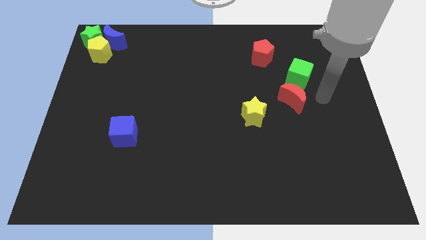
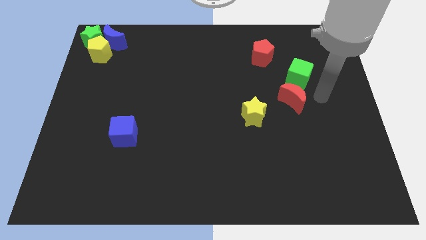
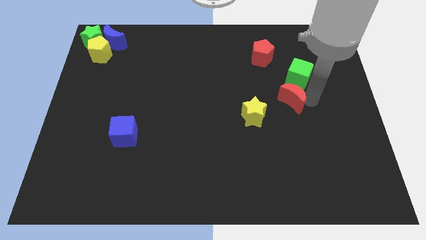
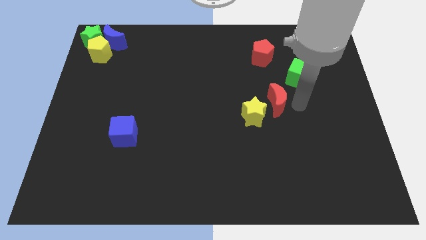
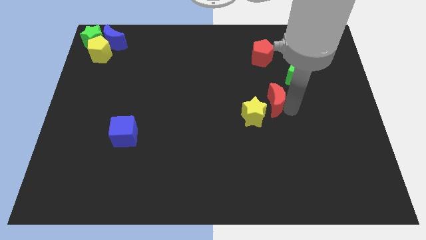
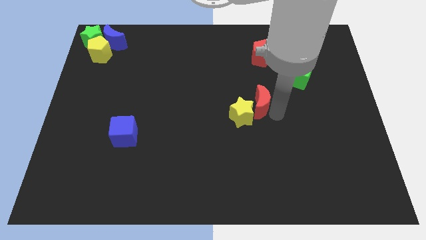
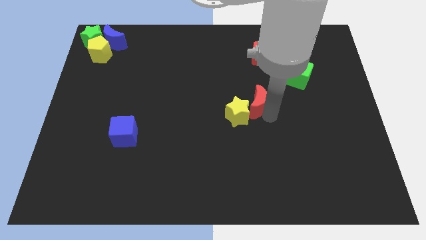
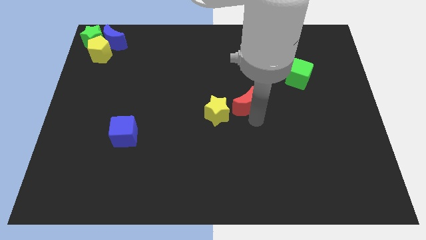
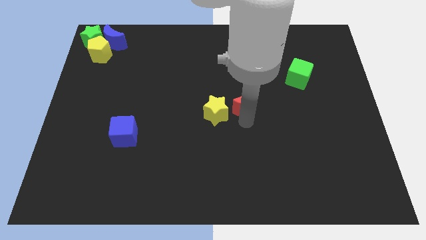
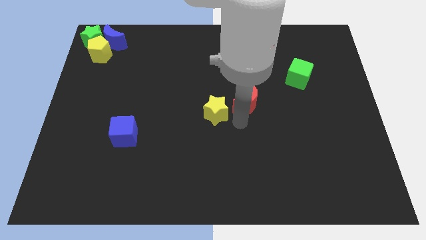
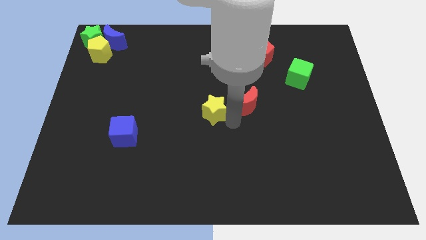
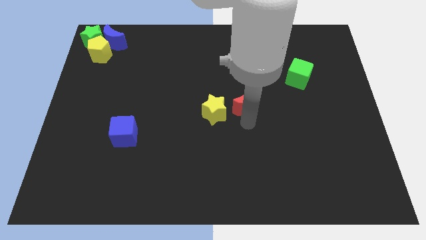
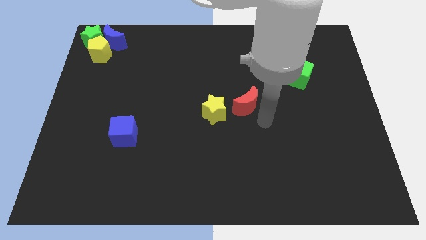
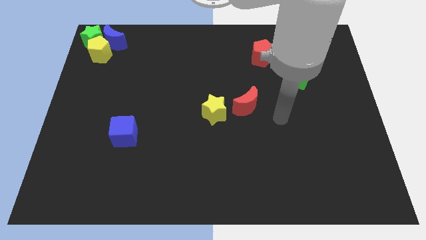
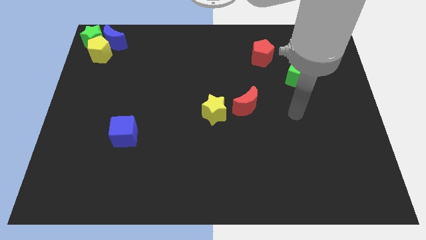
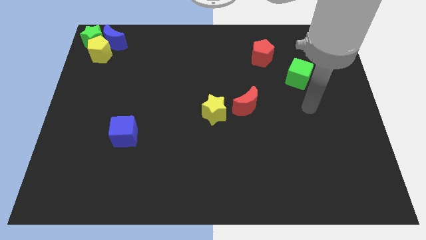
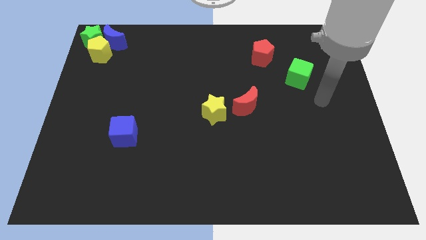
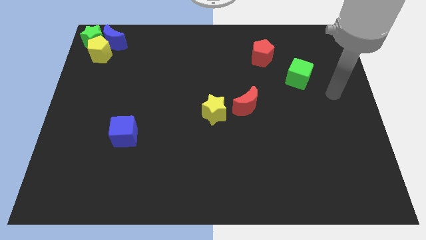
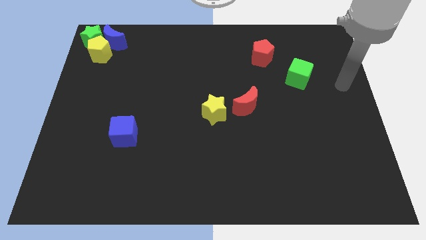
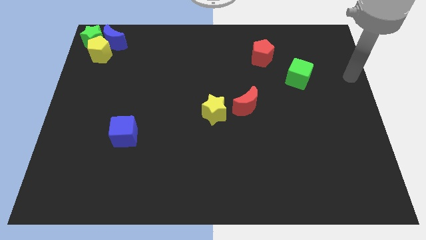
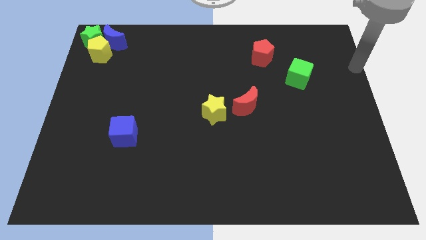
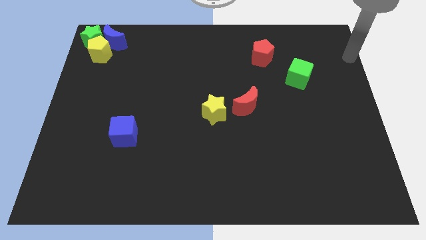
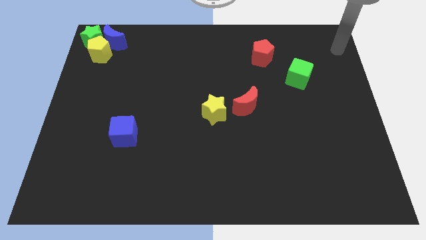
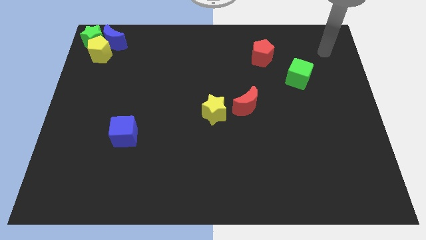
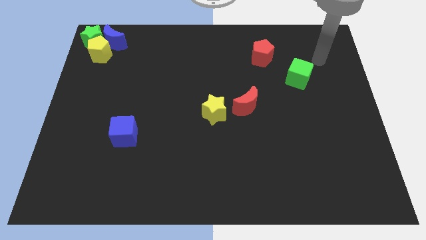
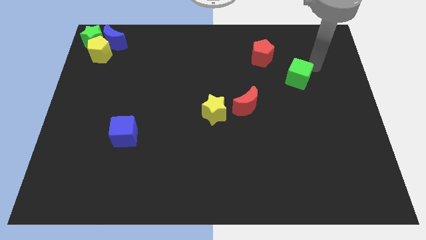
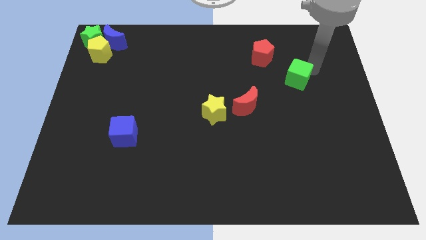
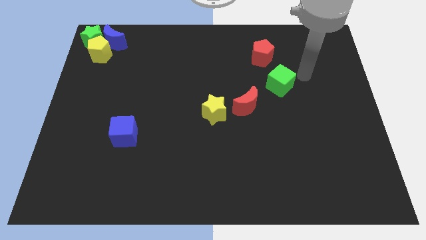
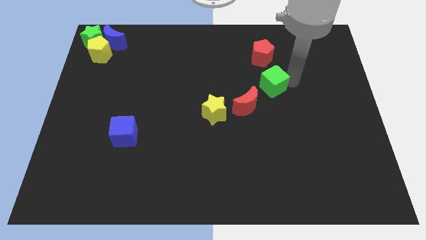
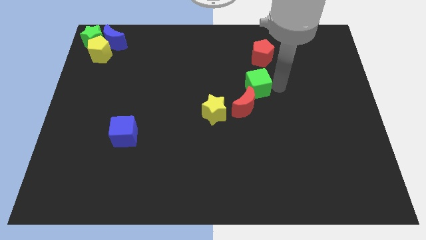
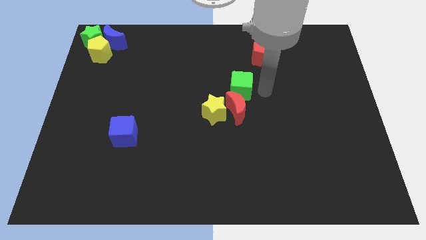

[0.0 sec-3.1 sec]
move red moon yellow star and green cube to the center

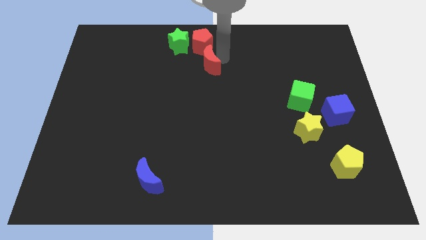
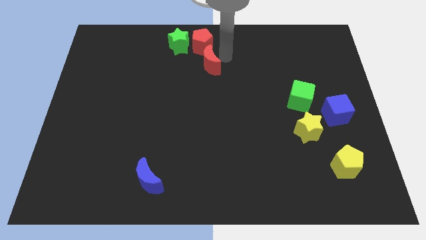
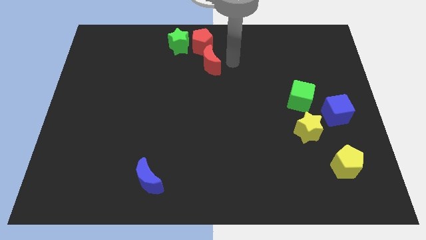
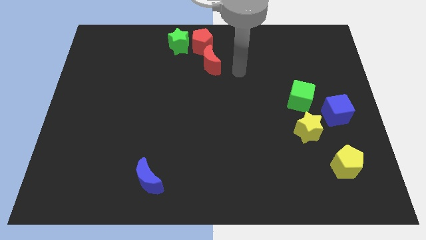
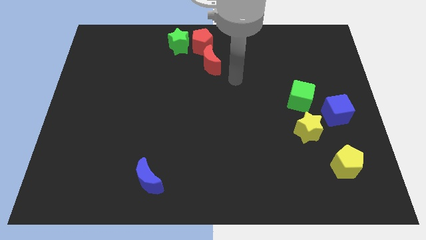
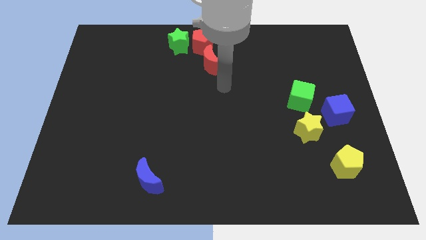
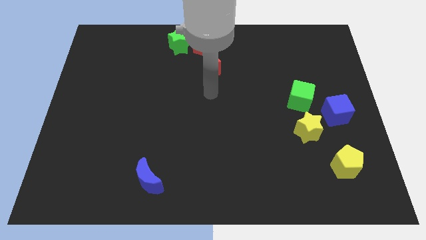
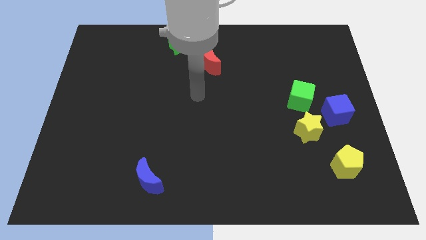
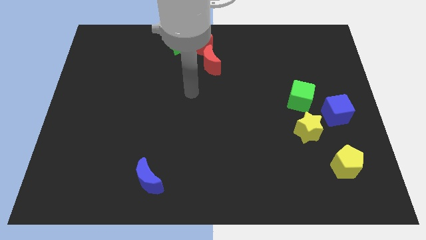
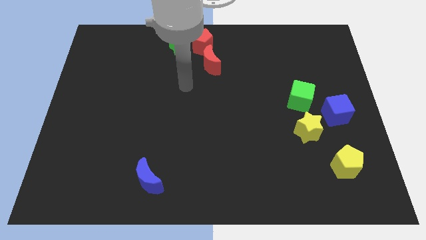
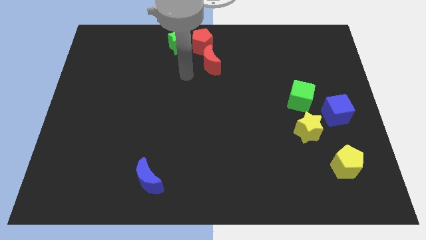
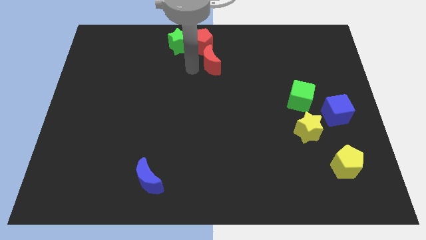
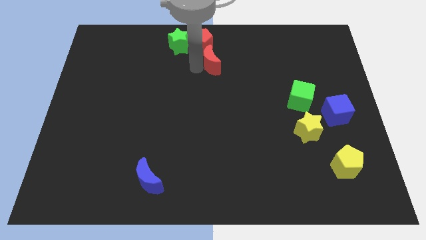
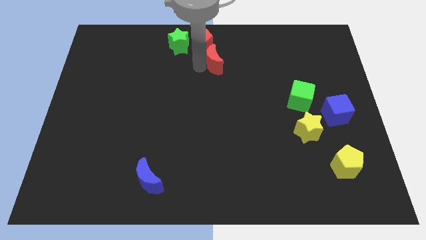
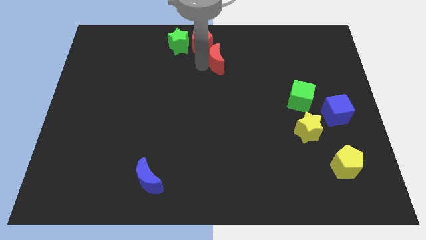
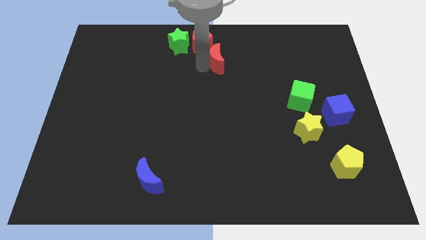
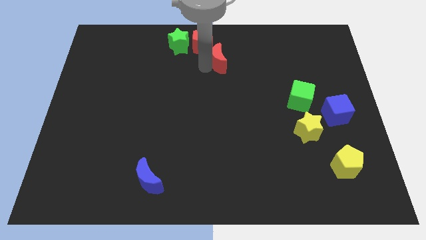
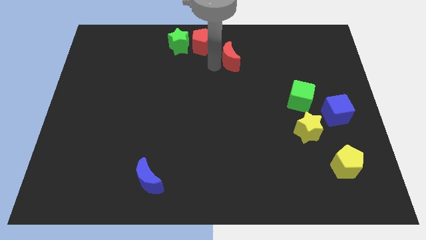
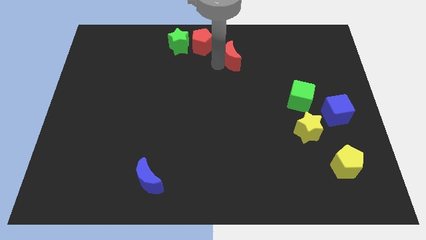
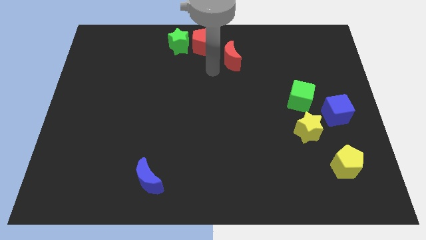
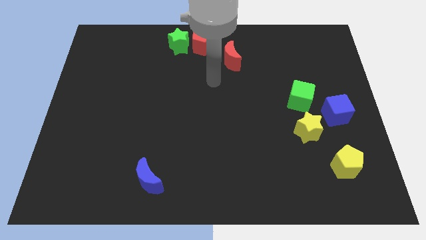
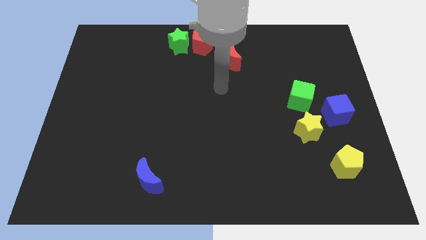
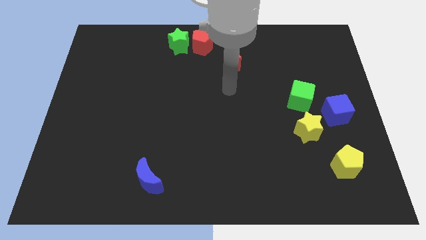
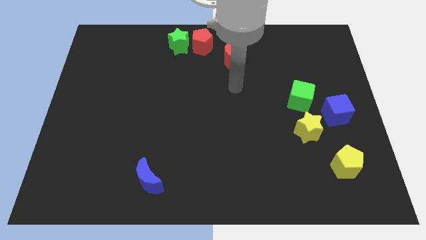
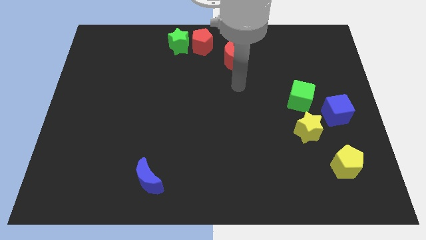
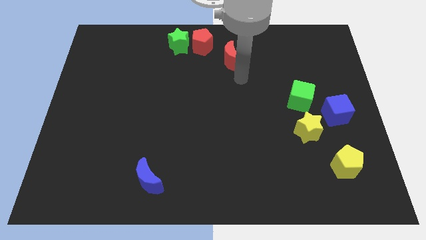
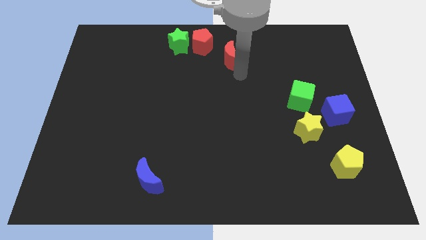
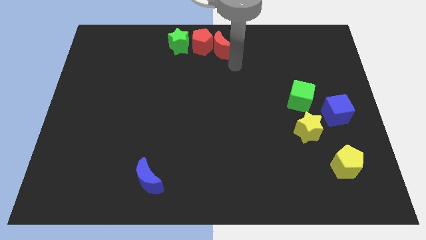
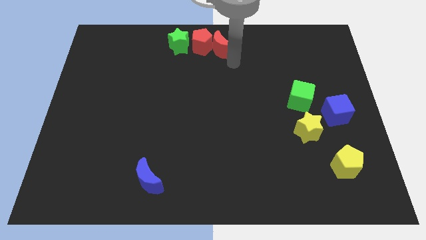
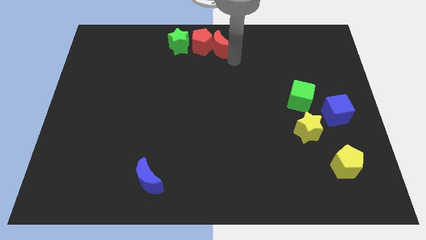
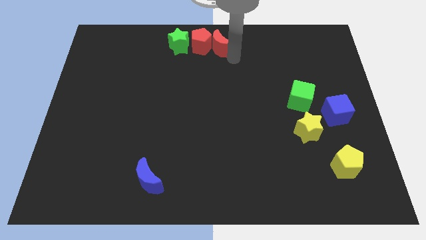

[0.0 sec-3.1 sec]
move red moon to the right of red pentagon

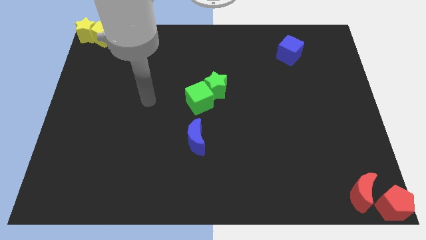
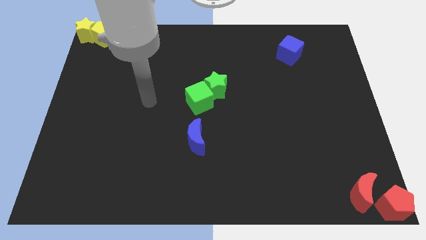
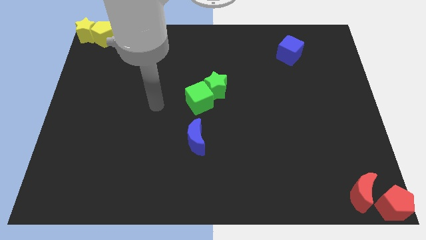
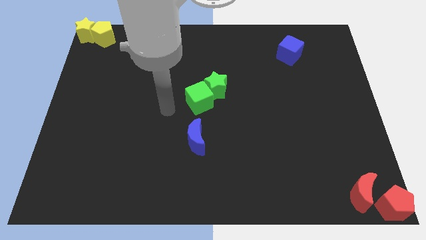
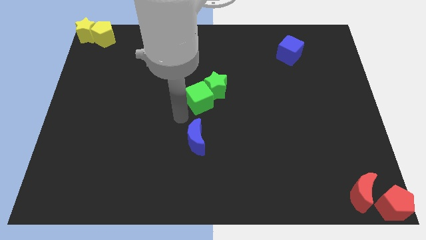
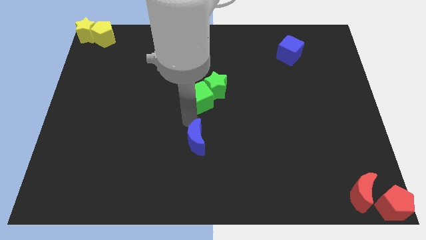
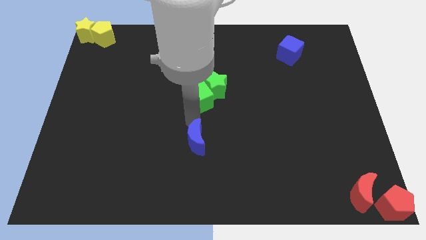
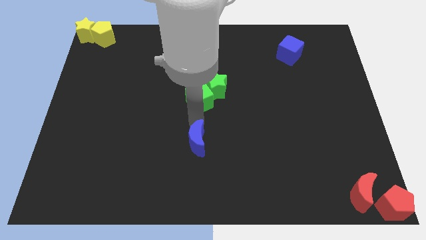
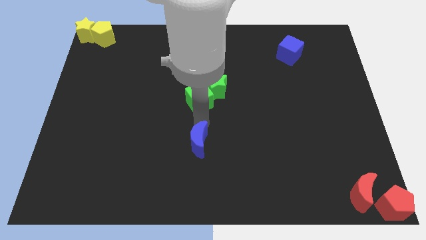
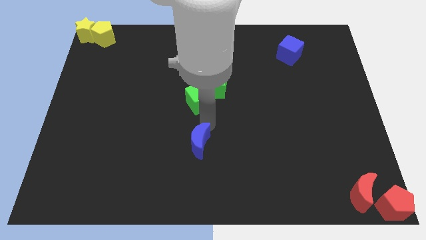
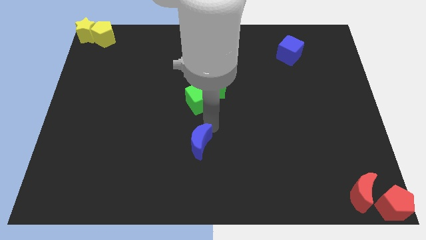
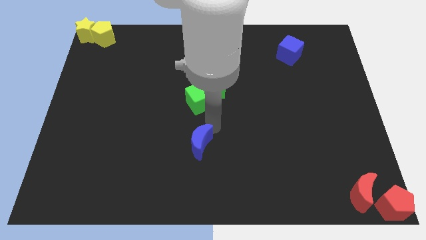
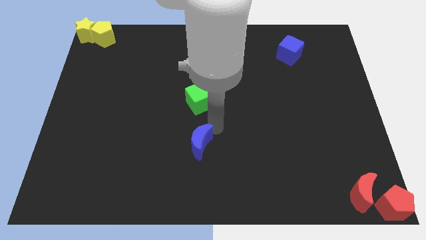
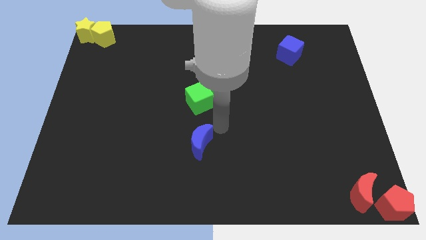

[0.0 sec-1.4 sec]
move the blue moon slightly downwards

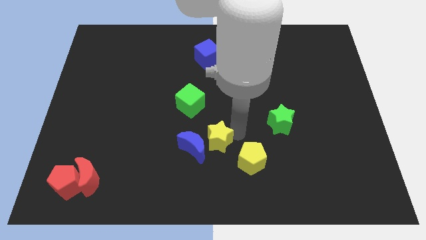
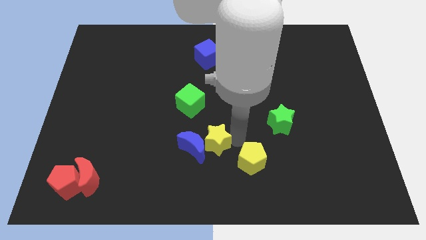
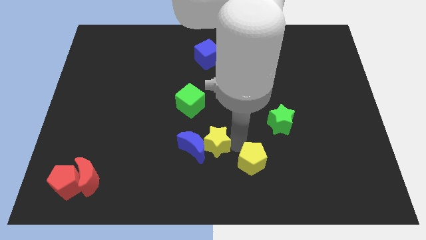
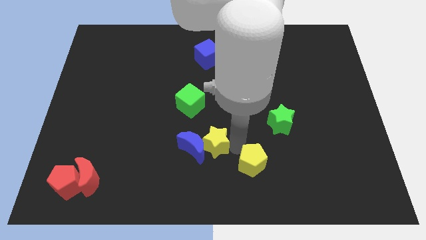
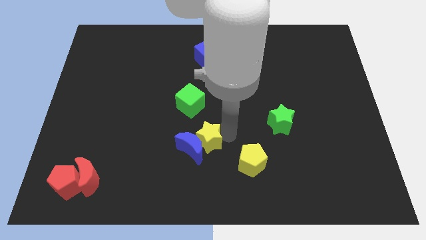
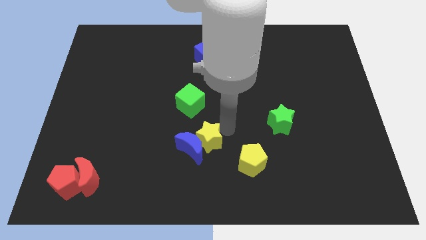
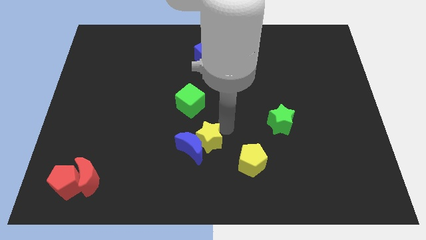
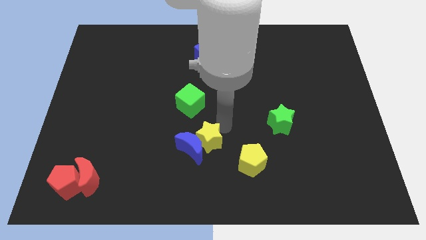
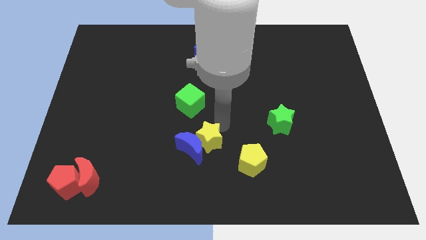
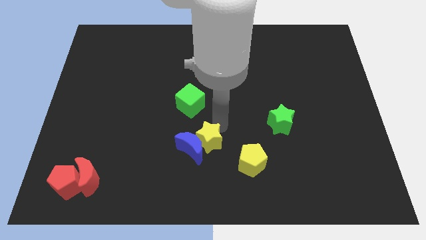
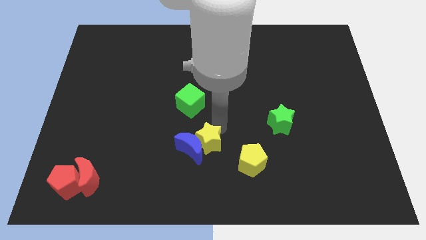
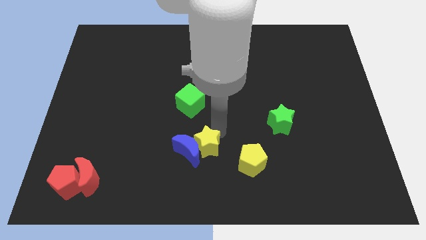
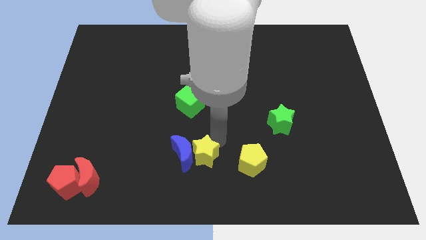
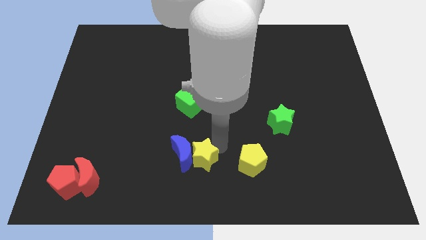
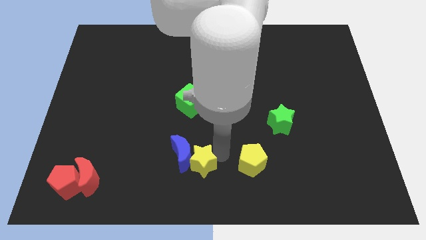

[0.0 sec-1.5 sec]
push the yellow star to the right of the blue crescent
